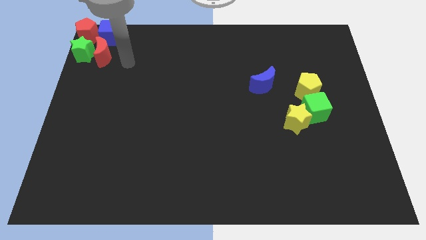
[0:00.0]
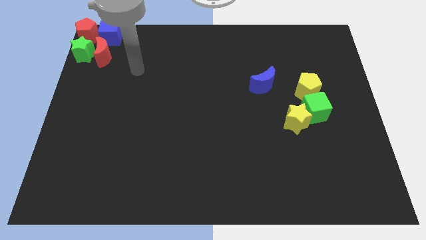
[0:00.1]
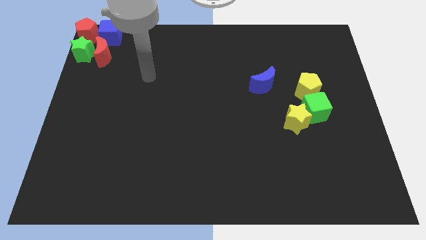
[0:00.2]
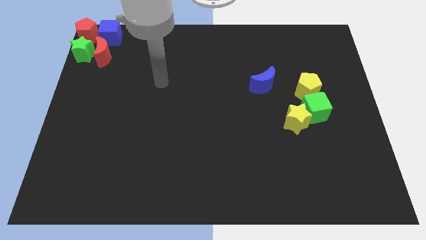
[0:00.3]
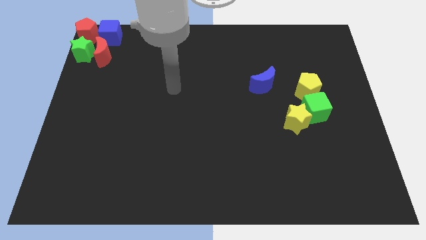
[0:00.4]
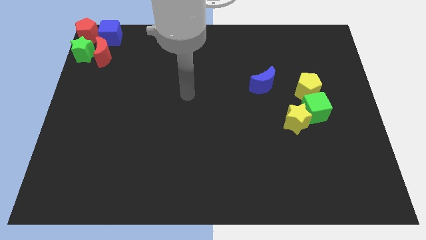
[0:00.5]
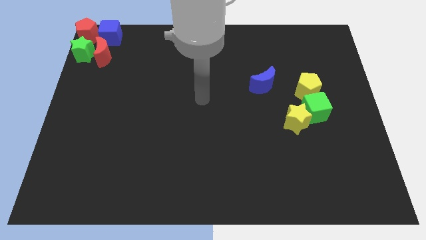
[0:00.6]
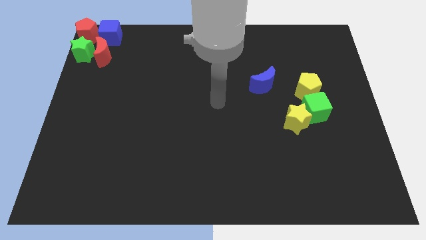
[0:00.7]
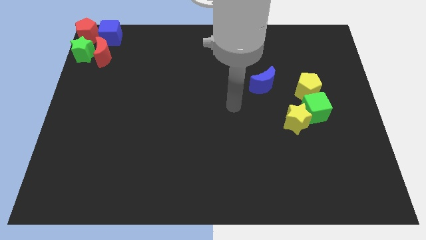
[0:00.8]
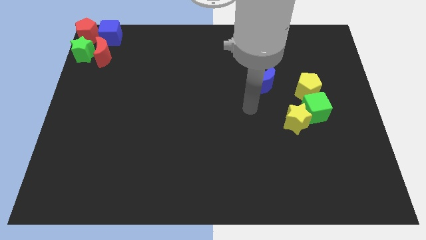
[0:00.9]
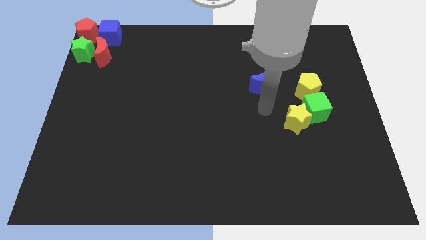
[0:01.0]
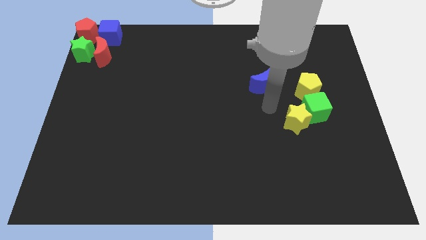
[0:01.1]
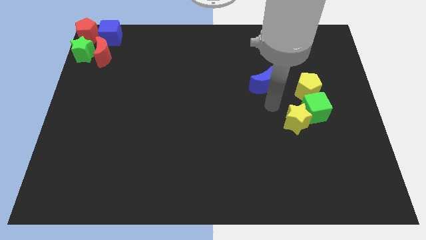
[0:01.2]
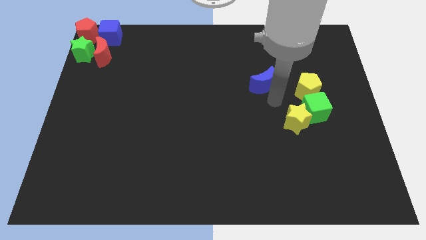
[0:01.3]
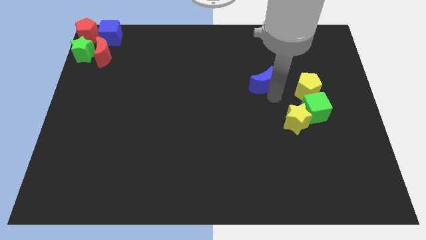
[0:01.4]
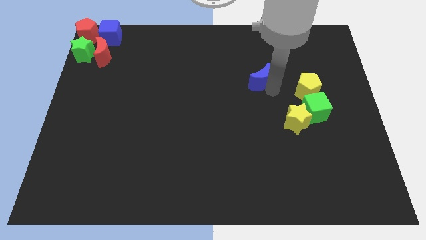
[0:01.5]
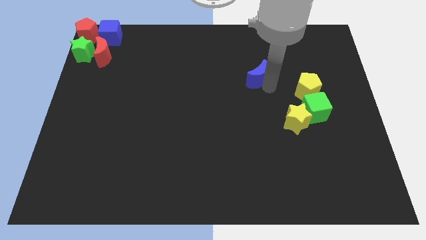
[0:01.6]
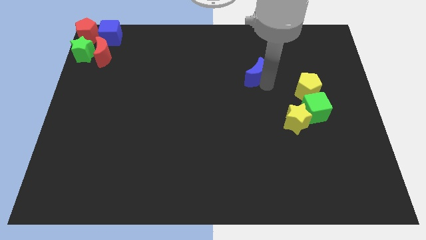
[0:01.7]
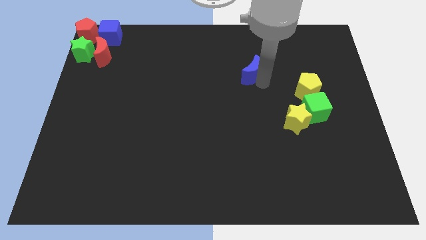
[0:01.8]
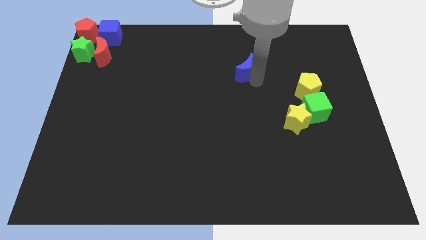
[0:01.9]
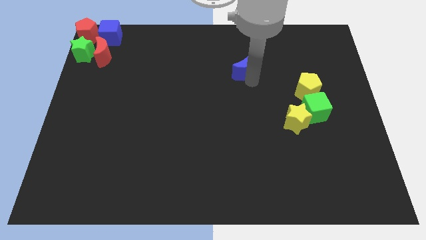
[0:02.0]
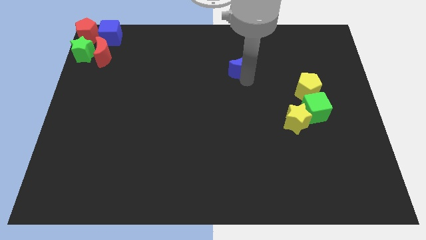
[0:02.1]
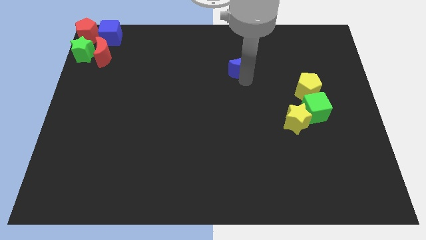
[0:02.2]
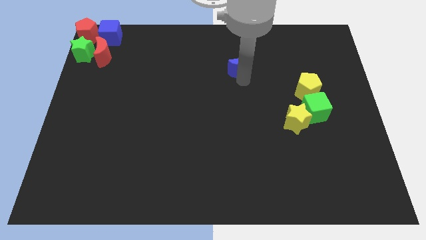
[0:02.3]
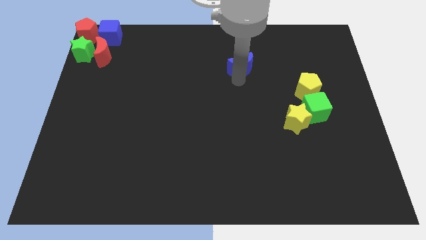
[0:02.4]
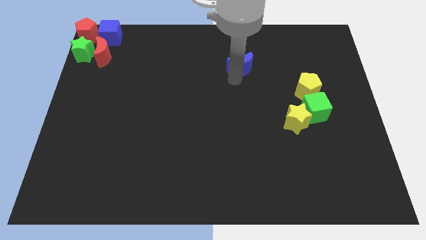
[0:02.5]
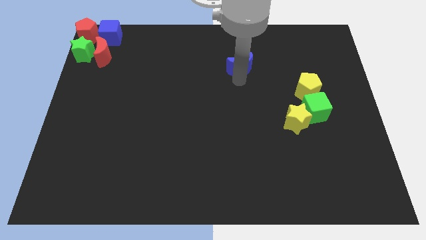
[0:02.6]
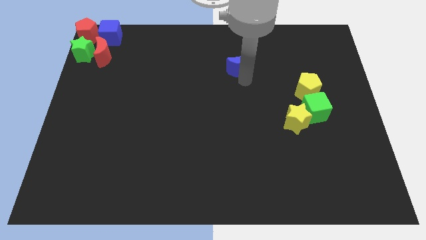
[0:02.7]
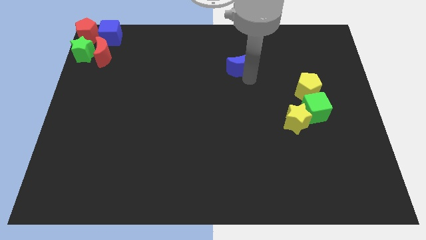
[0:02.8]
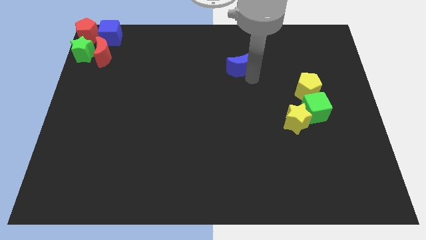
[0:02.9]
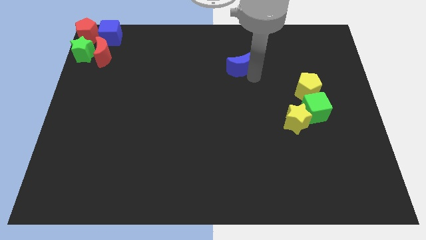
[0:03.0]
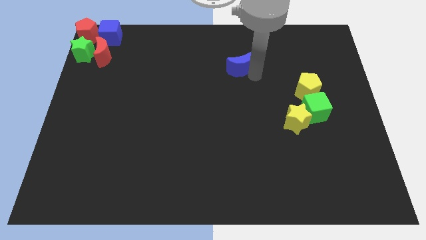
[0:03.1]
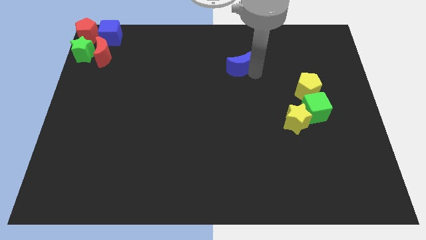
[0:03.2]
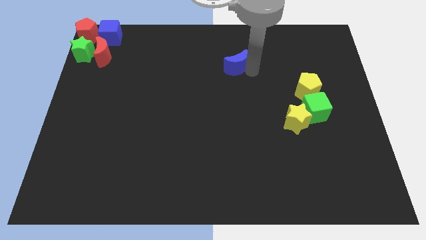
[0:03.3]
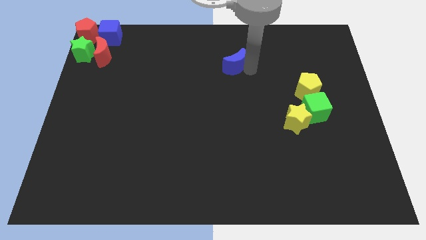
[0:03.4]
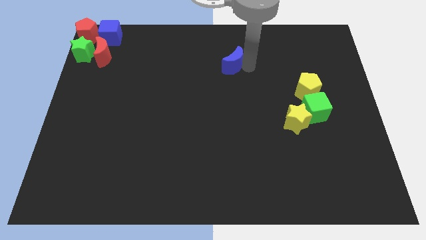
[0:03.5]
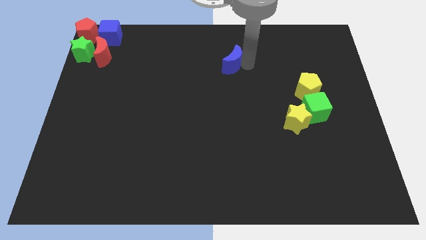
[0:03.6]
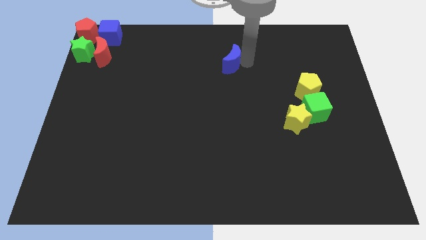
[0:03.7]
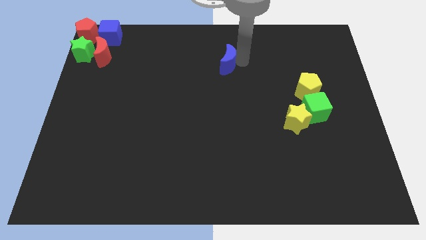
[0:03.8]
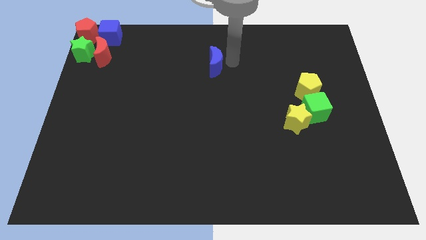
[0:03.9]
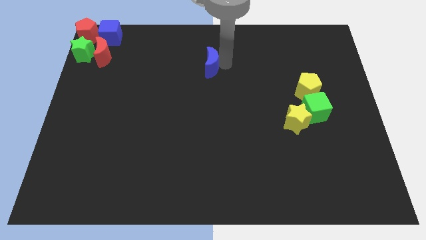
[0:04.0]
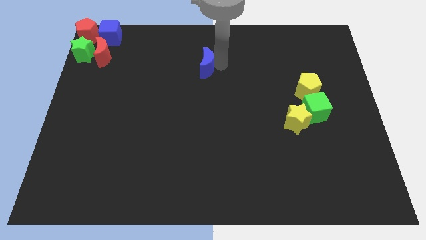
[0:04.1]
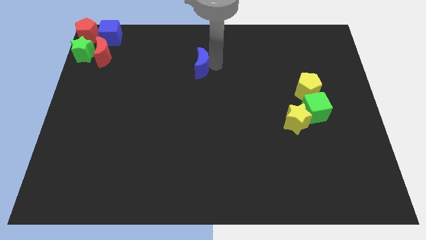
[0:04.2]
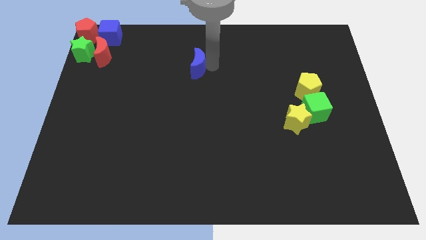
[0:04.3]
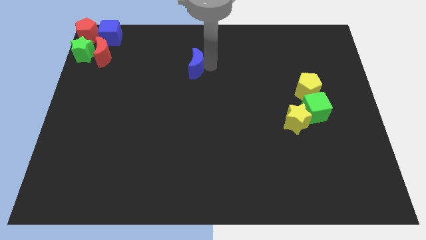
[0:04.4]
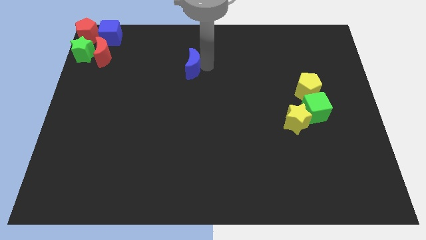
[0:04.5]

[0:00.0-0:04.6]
push blue moon towards top center

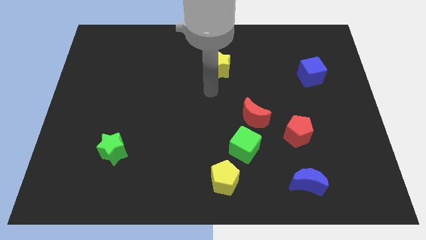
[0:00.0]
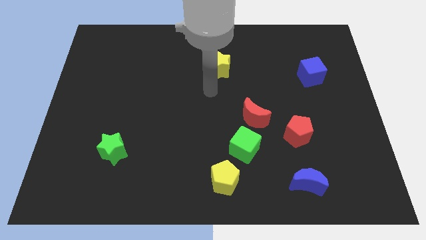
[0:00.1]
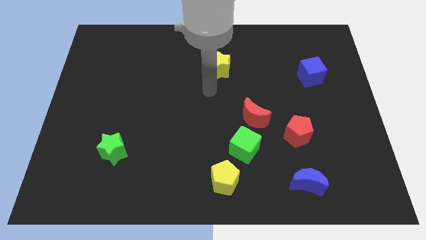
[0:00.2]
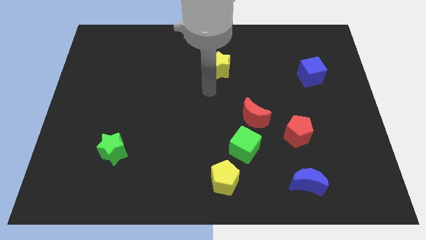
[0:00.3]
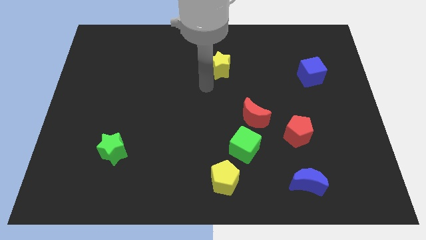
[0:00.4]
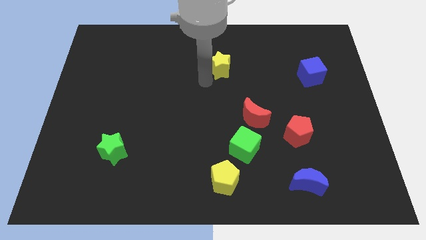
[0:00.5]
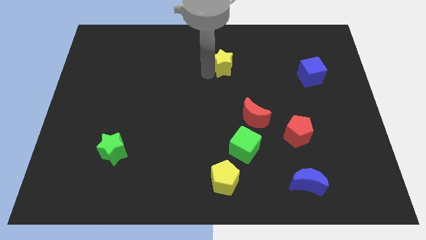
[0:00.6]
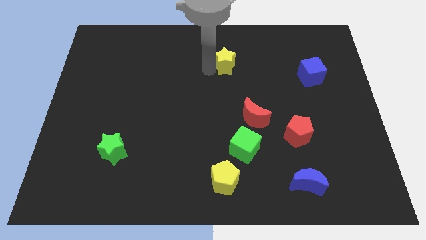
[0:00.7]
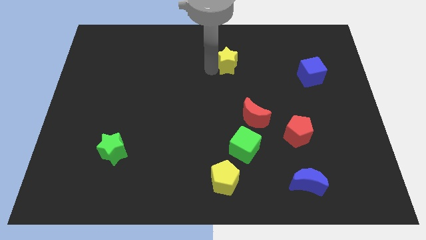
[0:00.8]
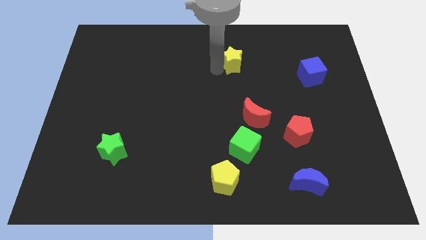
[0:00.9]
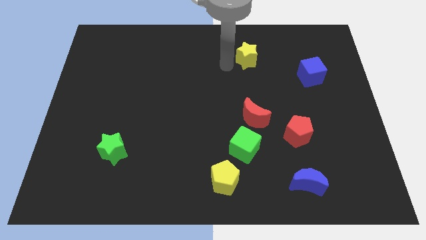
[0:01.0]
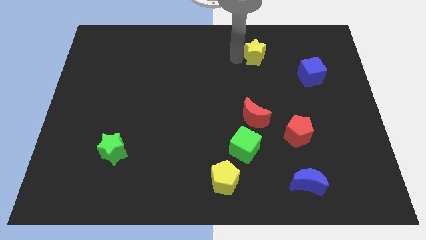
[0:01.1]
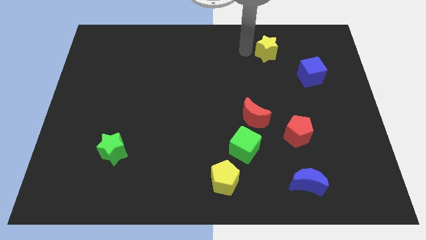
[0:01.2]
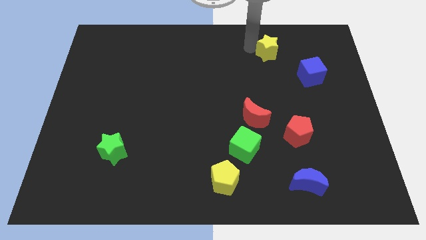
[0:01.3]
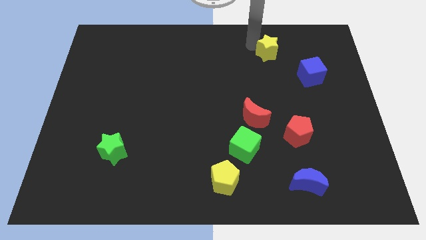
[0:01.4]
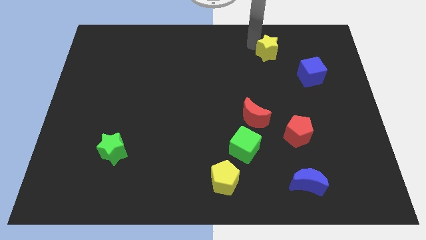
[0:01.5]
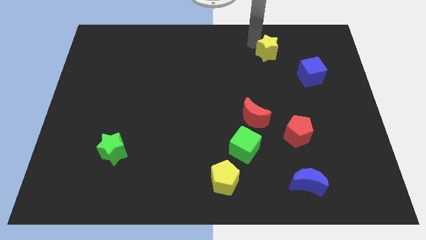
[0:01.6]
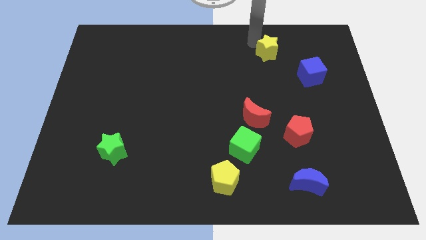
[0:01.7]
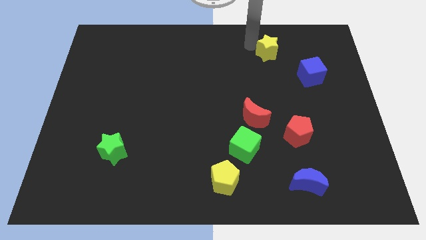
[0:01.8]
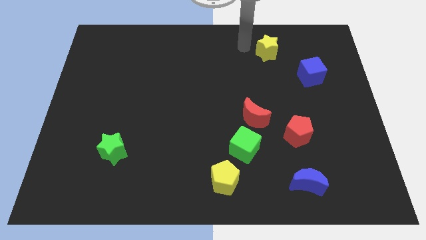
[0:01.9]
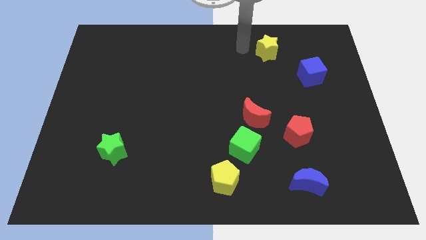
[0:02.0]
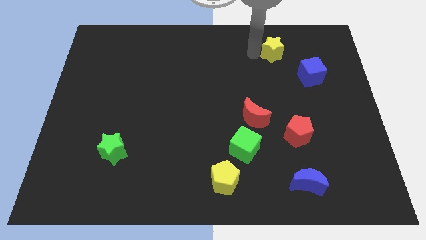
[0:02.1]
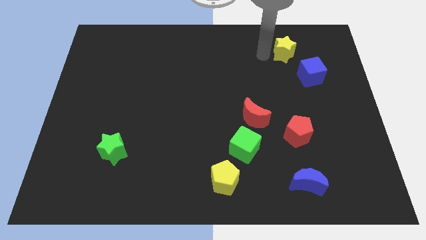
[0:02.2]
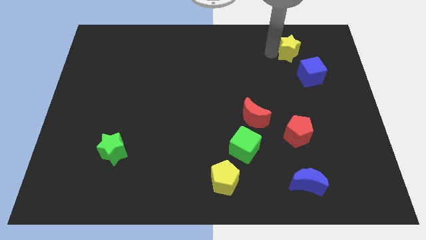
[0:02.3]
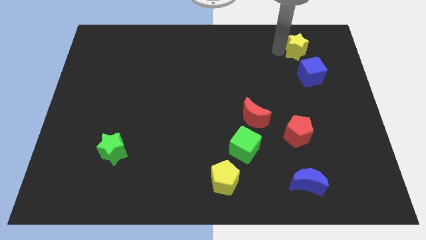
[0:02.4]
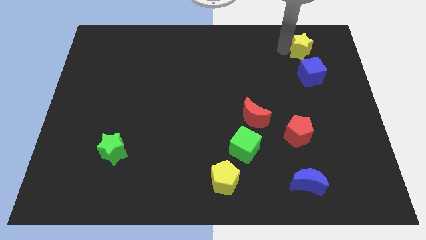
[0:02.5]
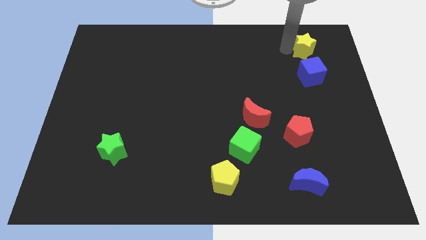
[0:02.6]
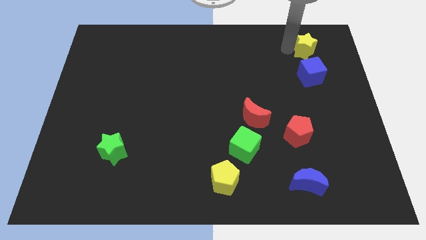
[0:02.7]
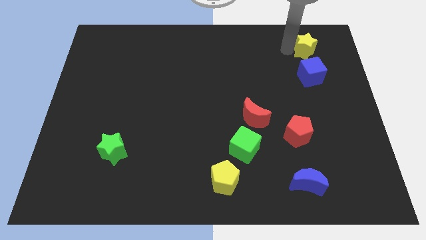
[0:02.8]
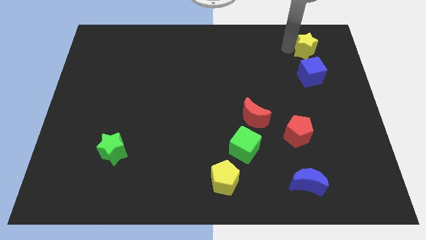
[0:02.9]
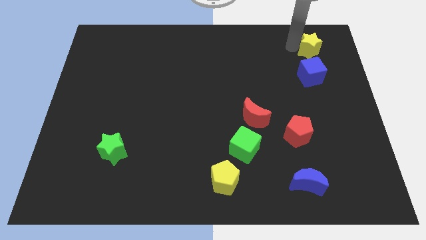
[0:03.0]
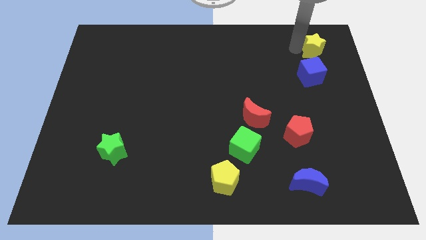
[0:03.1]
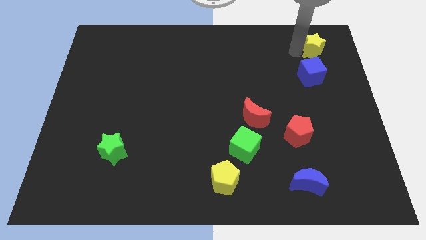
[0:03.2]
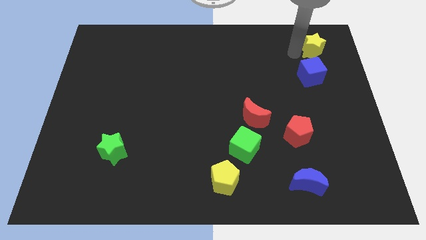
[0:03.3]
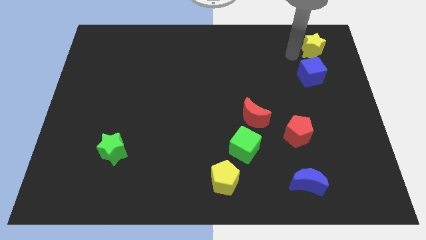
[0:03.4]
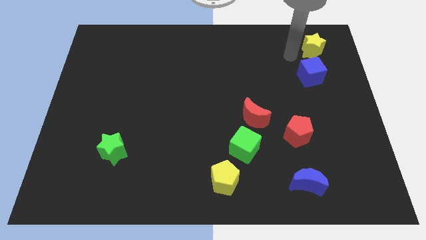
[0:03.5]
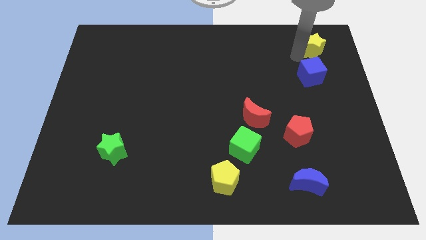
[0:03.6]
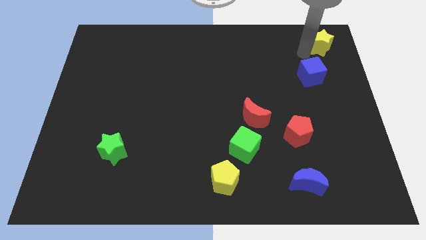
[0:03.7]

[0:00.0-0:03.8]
move the yellow star towards the top right of the board

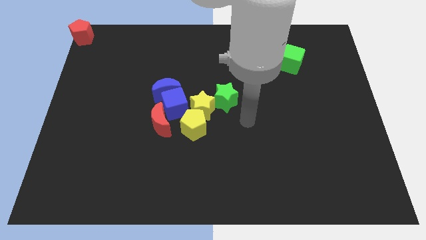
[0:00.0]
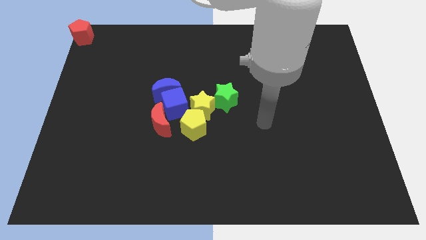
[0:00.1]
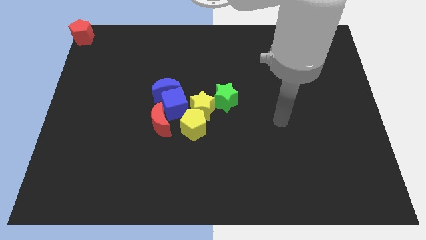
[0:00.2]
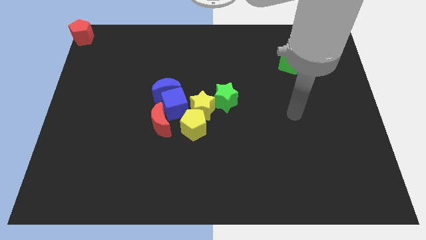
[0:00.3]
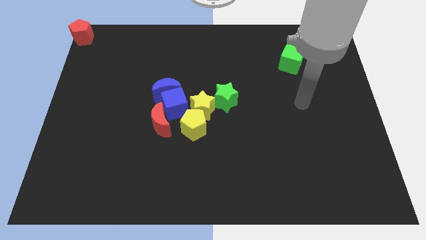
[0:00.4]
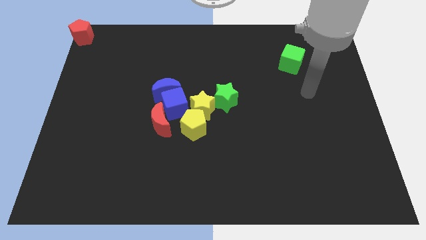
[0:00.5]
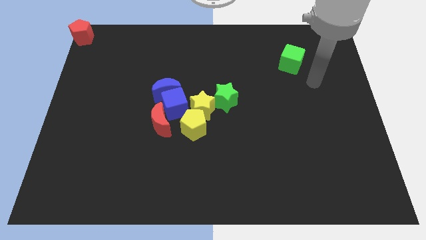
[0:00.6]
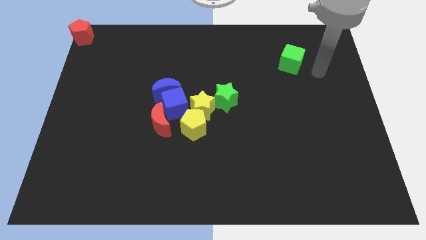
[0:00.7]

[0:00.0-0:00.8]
move away the arm from the green star
